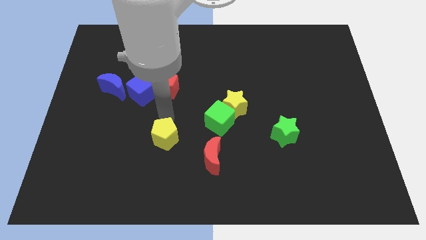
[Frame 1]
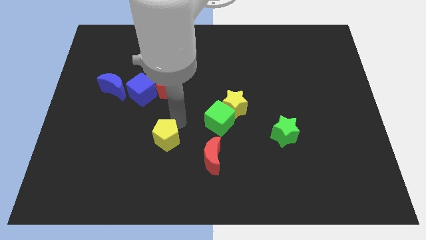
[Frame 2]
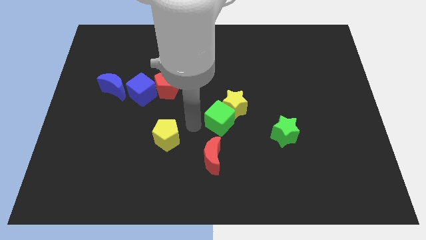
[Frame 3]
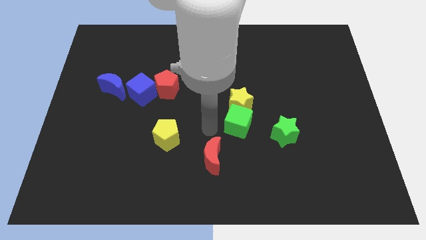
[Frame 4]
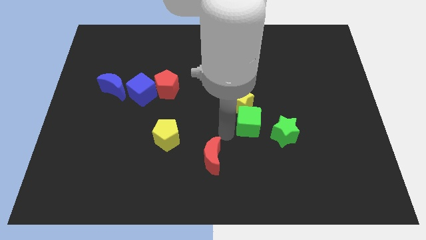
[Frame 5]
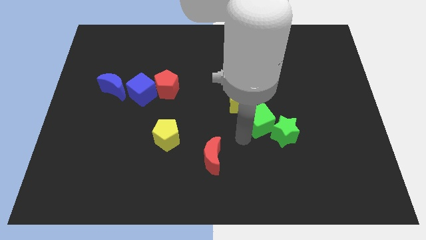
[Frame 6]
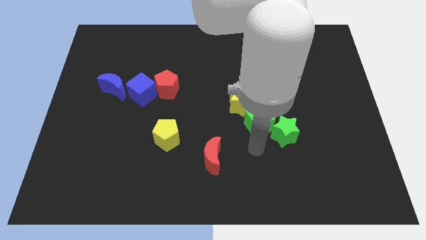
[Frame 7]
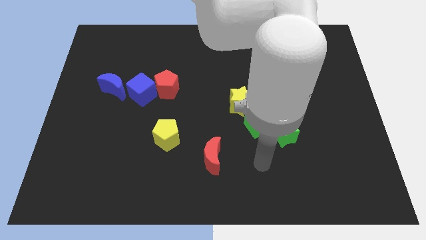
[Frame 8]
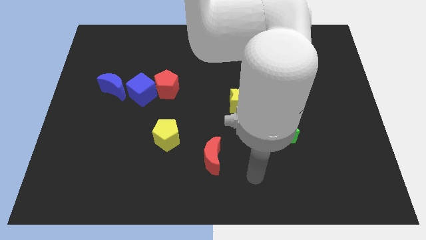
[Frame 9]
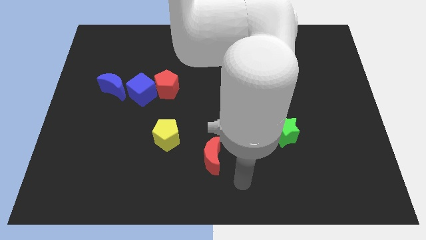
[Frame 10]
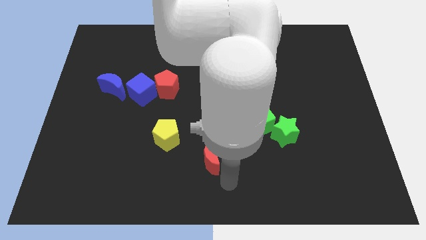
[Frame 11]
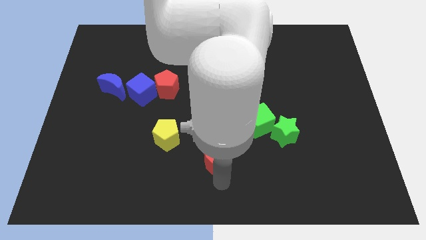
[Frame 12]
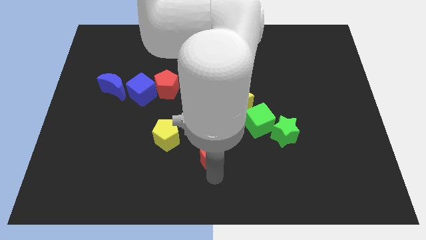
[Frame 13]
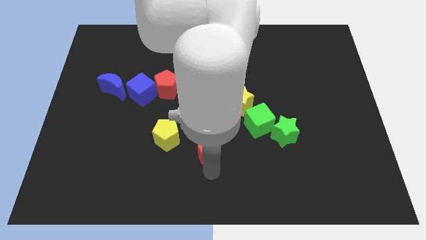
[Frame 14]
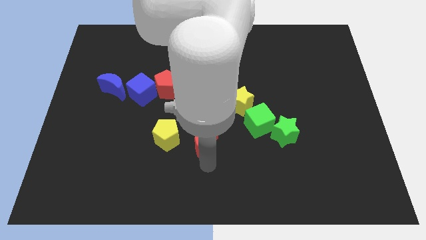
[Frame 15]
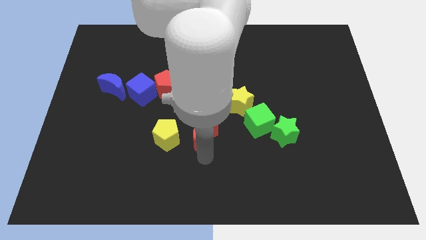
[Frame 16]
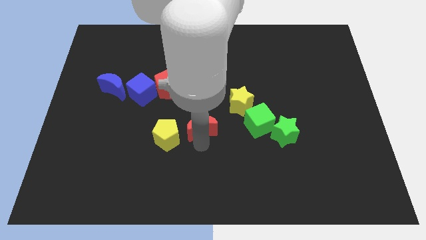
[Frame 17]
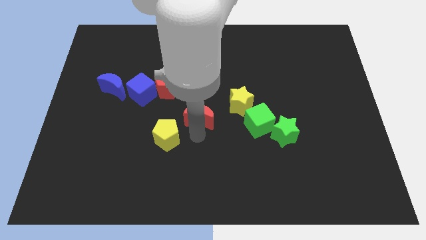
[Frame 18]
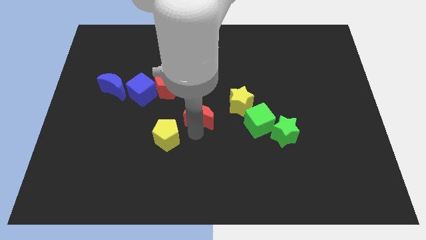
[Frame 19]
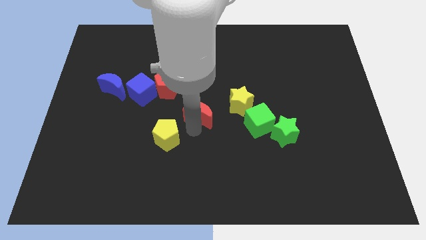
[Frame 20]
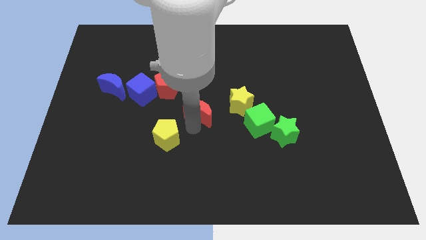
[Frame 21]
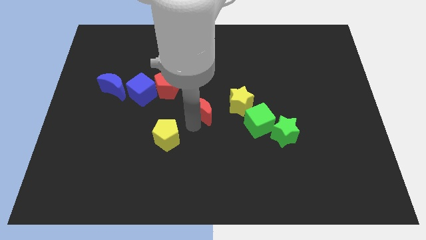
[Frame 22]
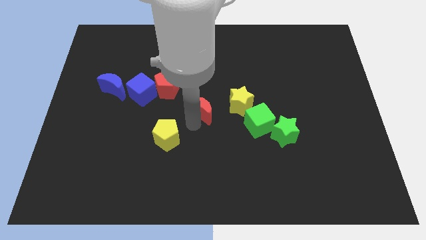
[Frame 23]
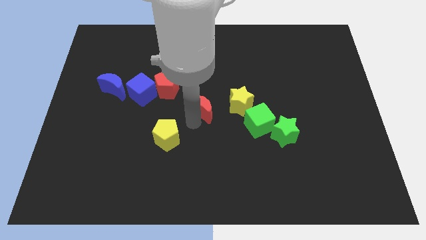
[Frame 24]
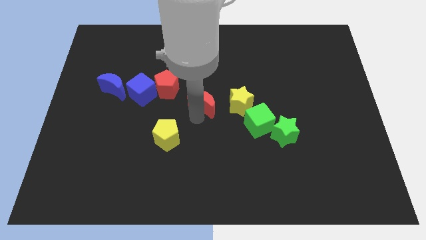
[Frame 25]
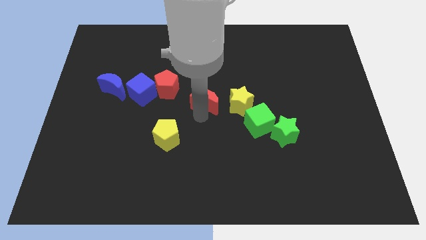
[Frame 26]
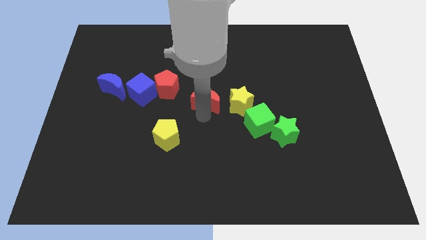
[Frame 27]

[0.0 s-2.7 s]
drag the red moon slightly upwards

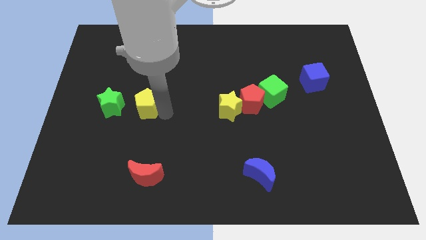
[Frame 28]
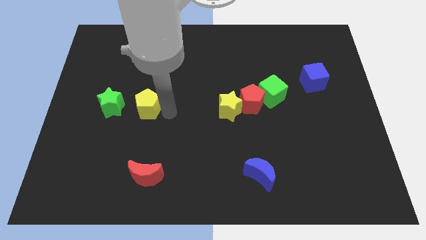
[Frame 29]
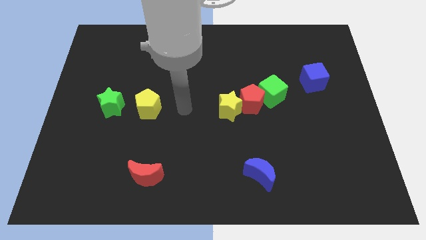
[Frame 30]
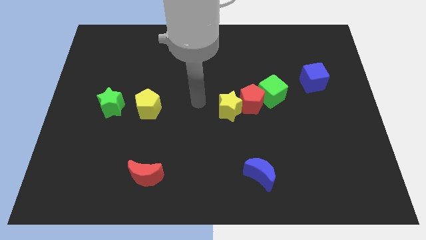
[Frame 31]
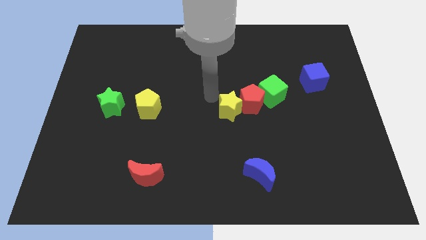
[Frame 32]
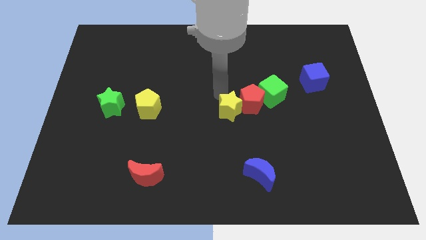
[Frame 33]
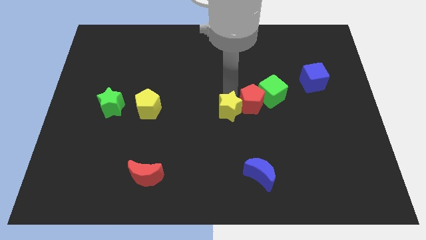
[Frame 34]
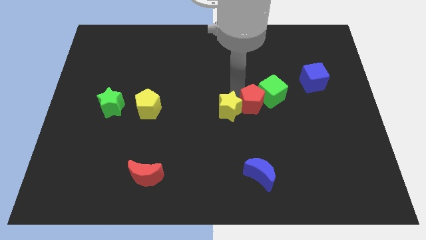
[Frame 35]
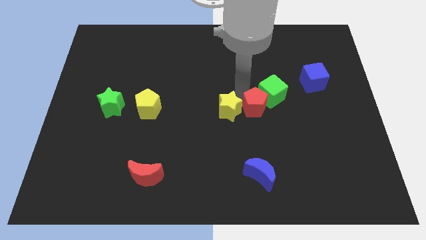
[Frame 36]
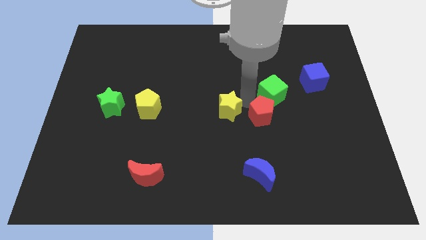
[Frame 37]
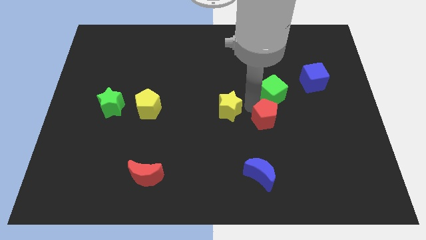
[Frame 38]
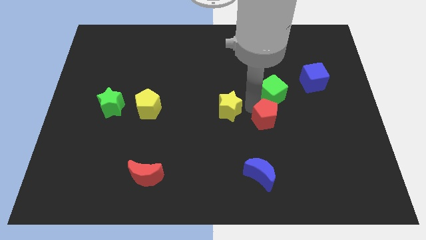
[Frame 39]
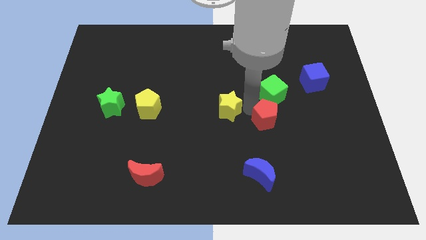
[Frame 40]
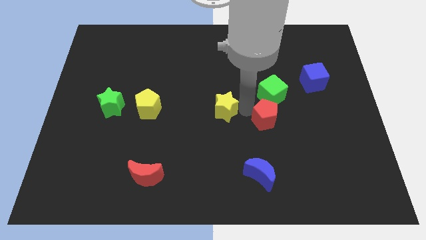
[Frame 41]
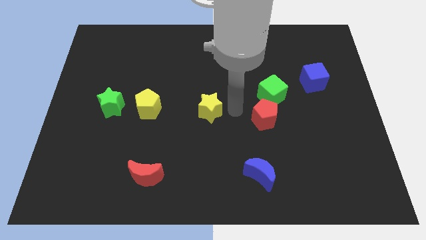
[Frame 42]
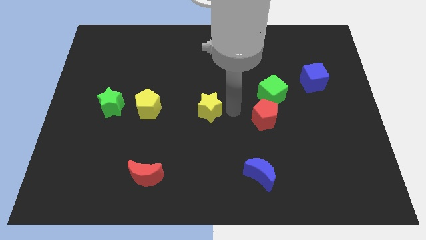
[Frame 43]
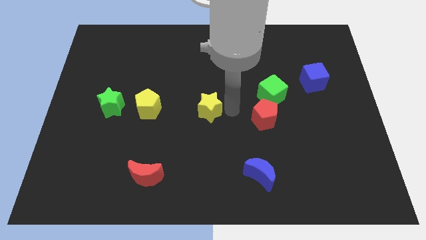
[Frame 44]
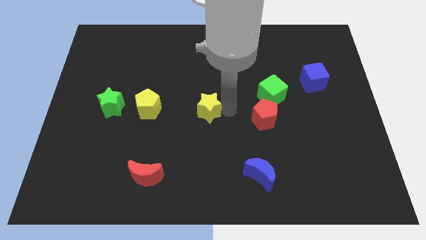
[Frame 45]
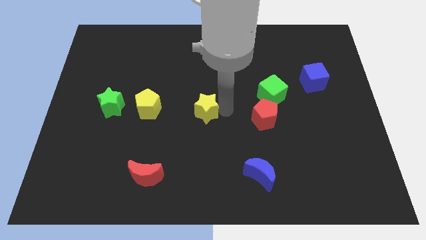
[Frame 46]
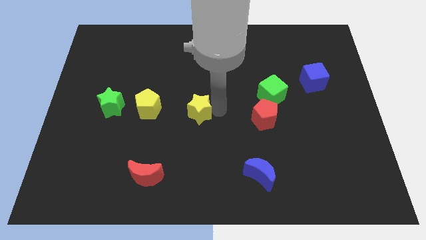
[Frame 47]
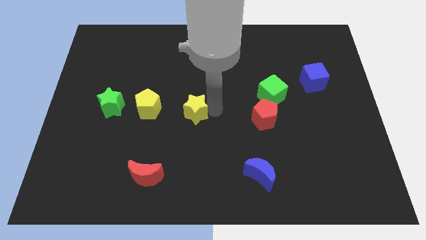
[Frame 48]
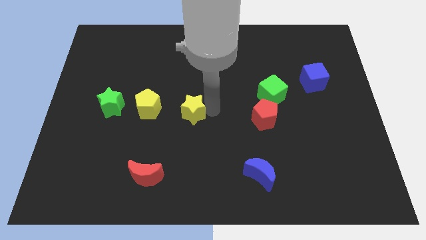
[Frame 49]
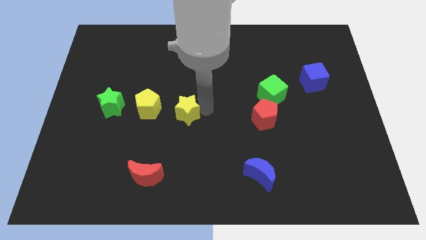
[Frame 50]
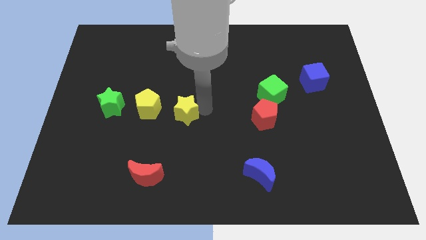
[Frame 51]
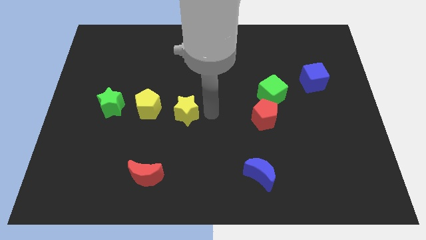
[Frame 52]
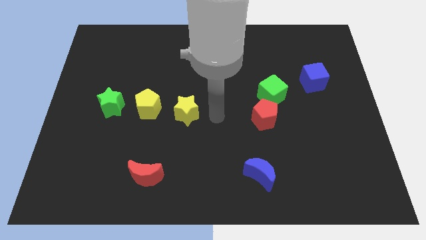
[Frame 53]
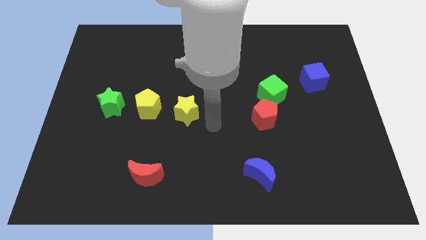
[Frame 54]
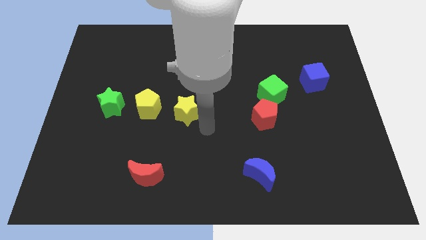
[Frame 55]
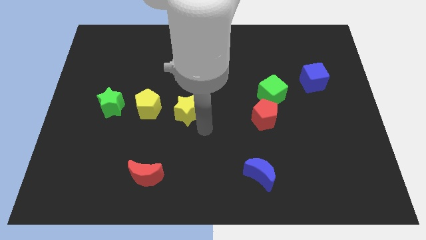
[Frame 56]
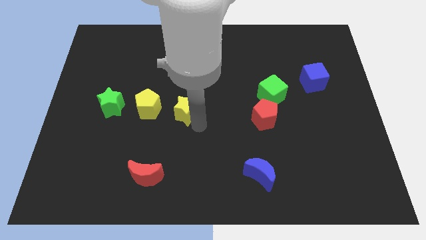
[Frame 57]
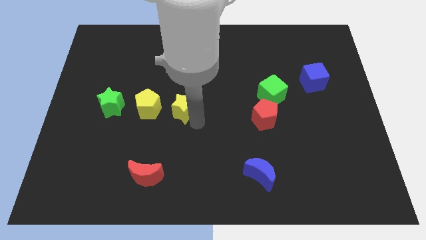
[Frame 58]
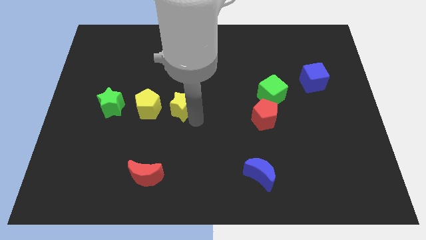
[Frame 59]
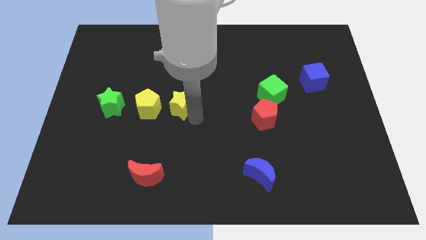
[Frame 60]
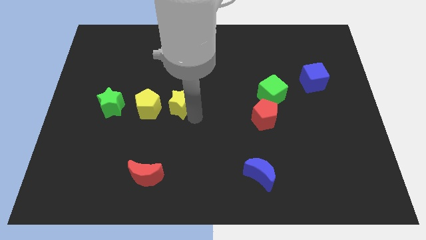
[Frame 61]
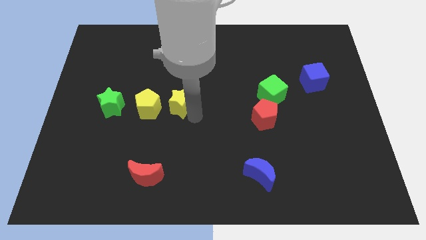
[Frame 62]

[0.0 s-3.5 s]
separate the red pentagon and the yellow star

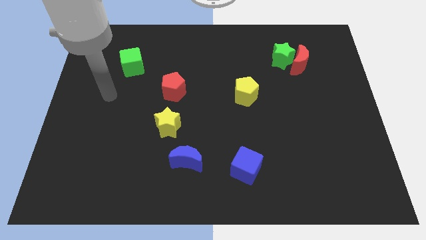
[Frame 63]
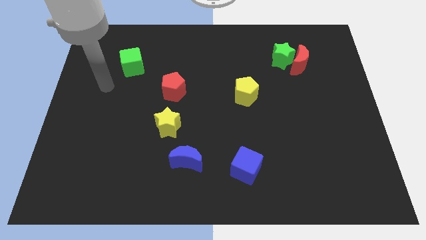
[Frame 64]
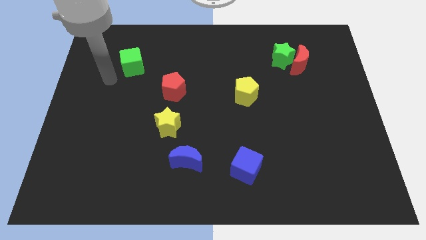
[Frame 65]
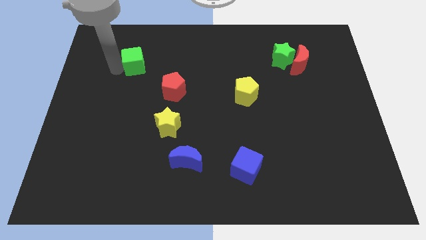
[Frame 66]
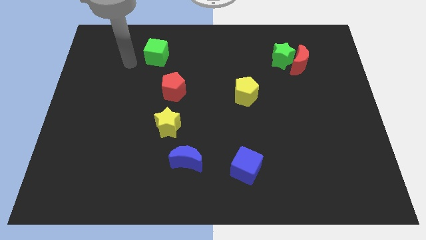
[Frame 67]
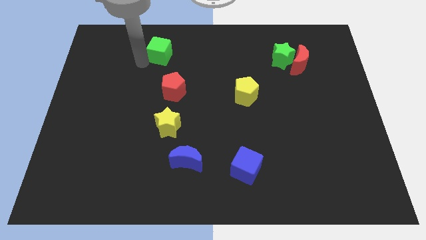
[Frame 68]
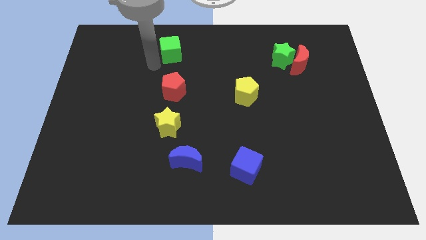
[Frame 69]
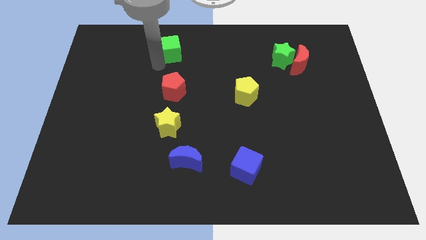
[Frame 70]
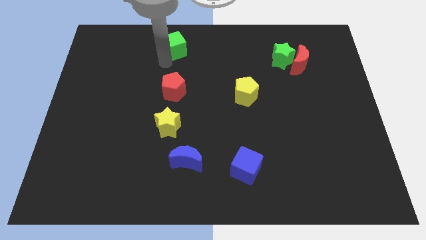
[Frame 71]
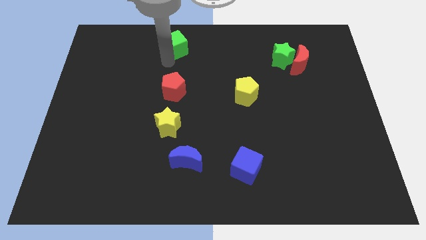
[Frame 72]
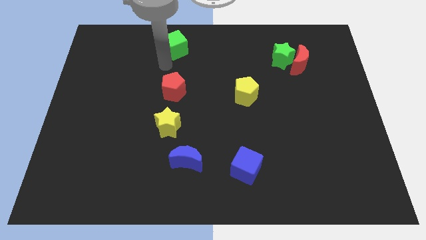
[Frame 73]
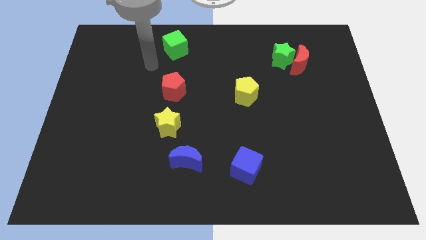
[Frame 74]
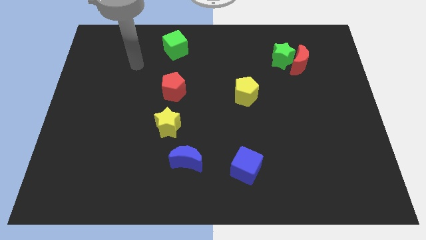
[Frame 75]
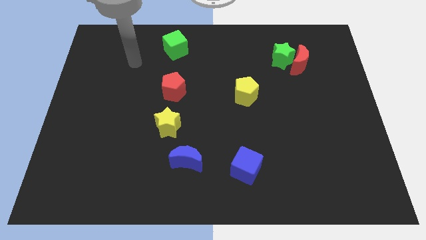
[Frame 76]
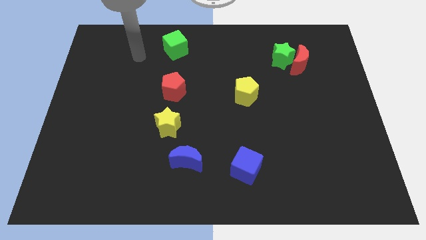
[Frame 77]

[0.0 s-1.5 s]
place green cube vertical to red pentagon

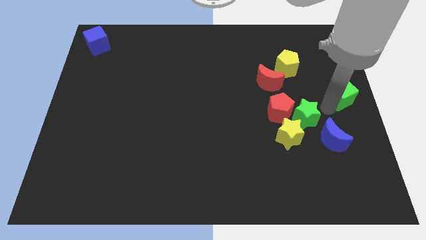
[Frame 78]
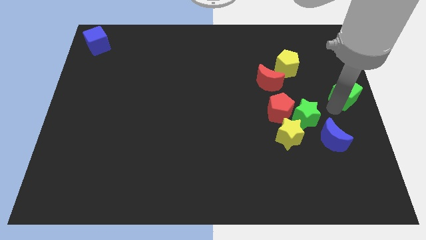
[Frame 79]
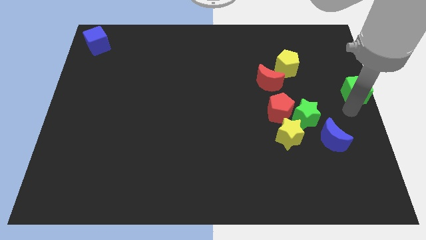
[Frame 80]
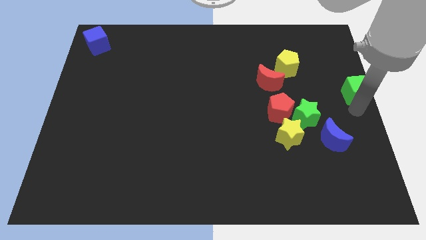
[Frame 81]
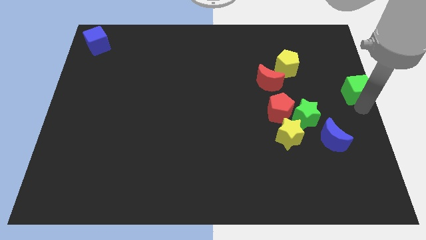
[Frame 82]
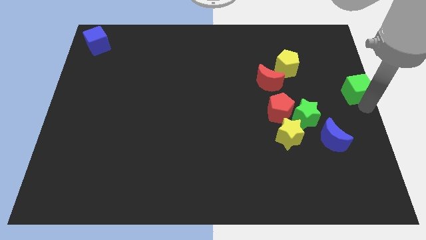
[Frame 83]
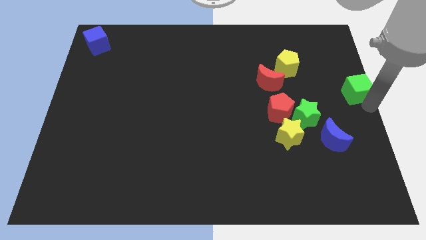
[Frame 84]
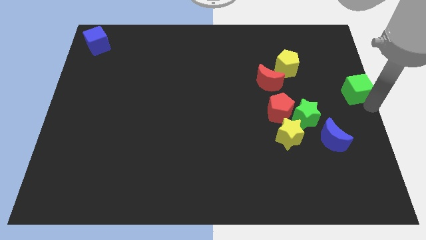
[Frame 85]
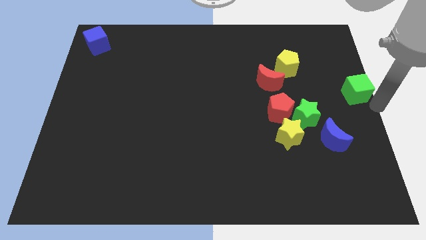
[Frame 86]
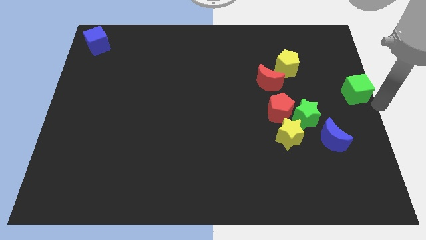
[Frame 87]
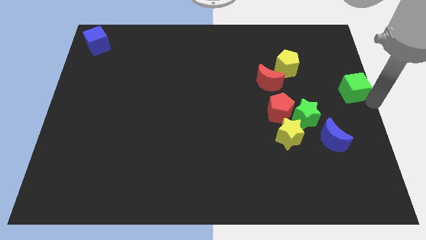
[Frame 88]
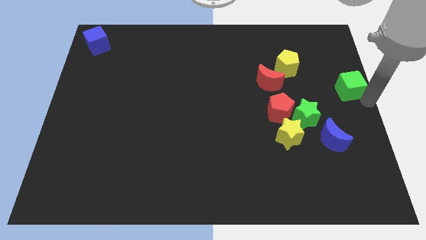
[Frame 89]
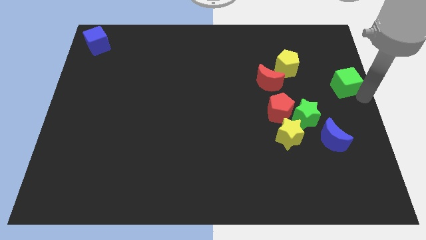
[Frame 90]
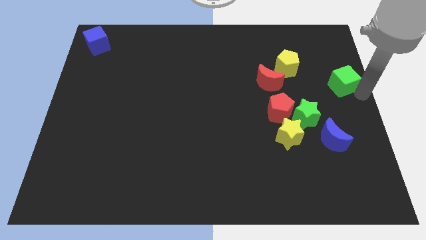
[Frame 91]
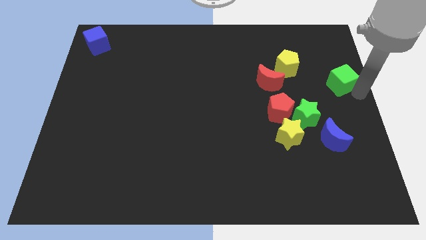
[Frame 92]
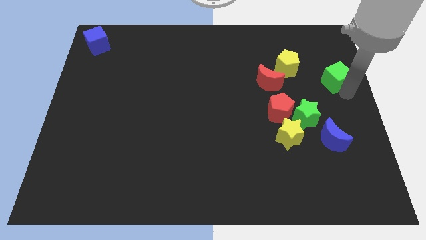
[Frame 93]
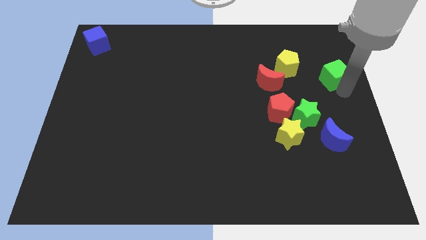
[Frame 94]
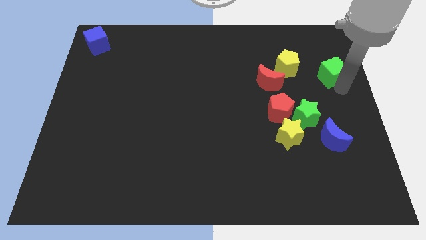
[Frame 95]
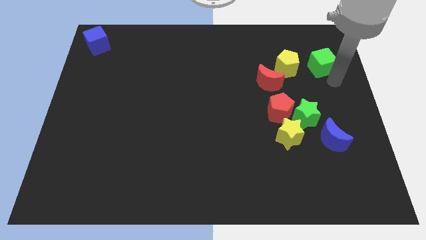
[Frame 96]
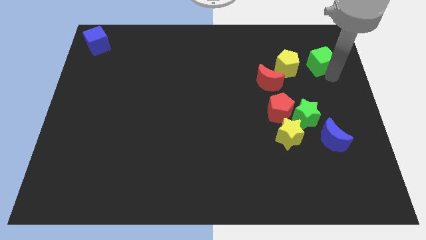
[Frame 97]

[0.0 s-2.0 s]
place the green cube at the right side of the yellow pentagon
